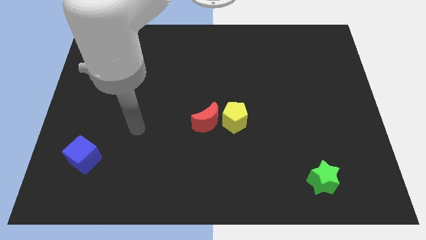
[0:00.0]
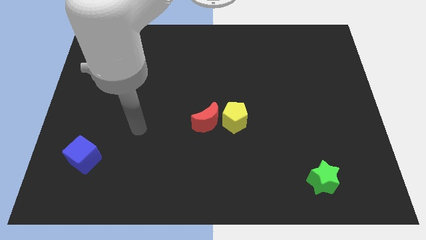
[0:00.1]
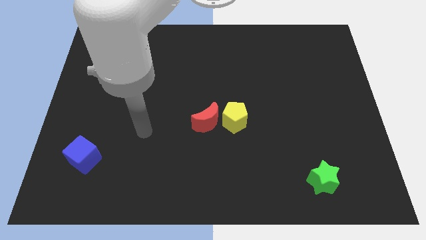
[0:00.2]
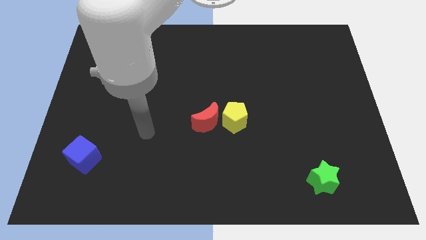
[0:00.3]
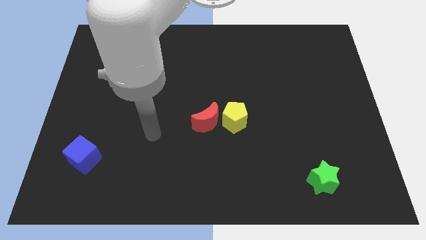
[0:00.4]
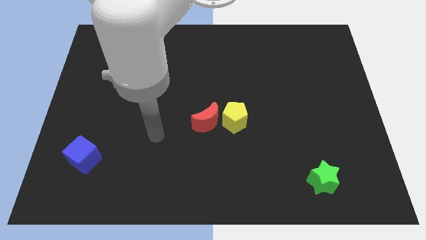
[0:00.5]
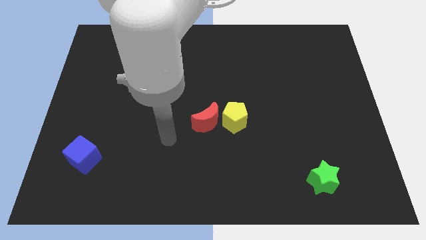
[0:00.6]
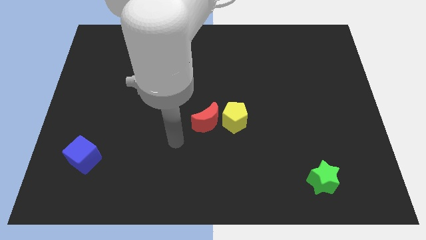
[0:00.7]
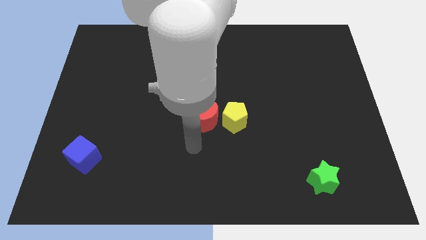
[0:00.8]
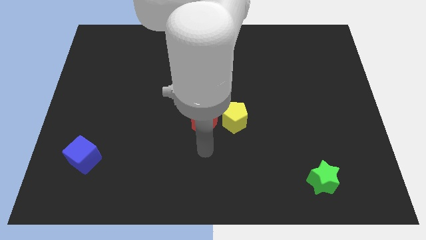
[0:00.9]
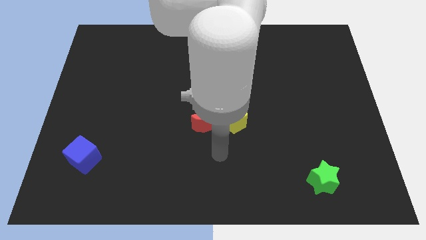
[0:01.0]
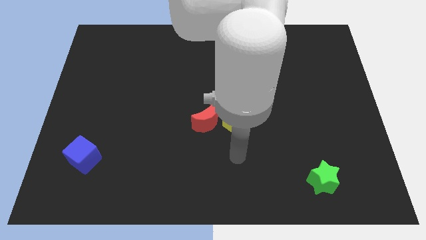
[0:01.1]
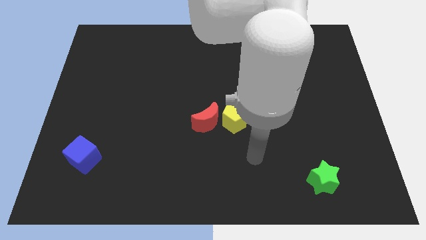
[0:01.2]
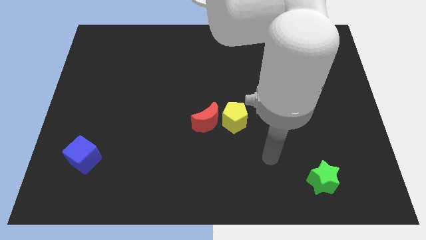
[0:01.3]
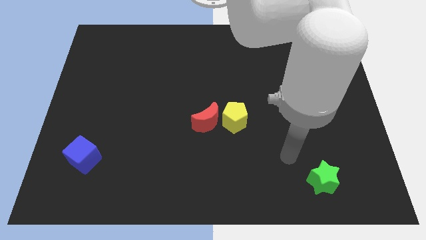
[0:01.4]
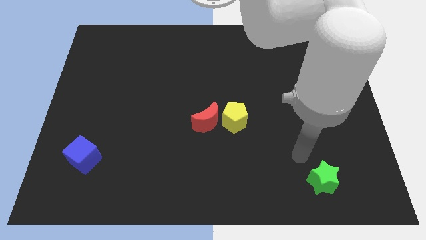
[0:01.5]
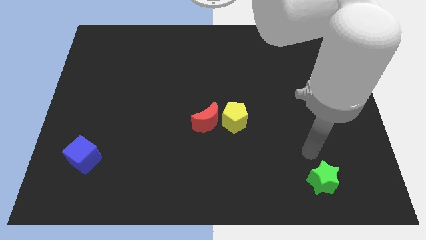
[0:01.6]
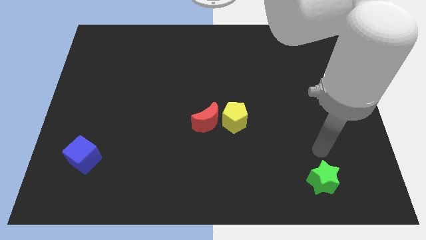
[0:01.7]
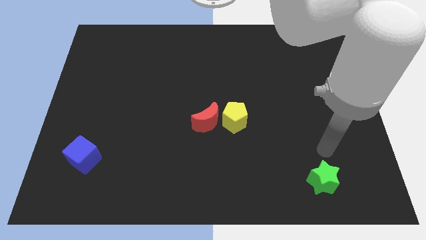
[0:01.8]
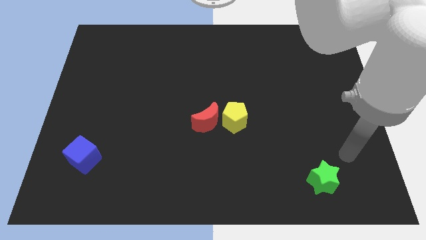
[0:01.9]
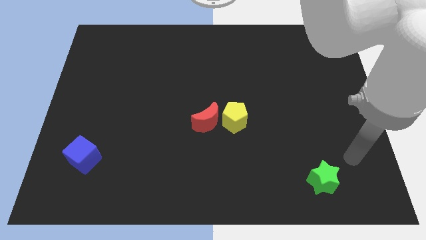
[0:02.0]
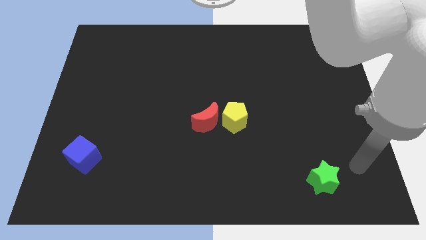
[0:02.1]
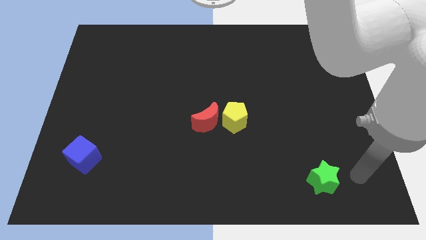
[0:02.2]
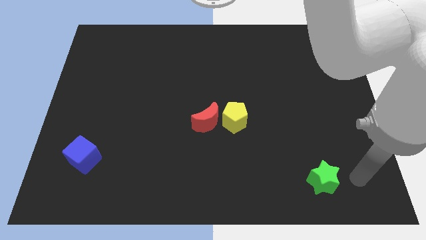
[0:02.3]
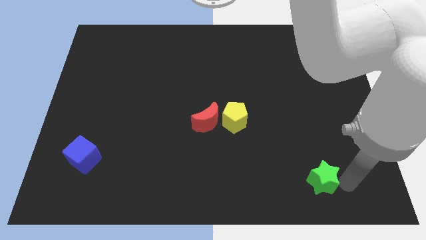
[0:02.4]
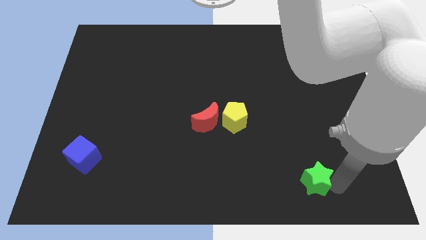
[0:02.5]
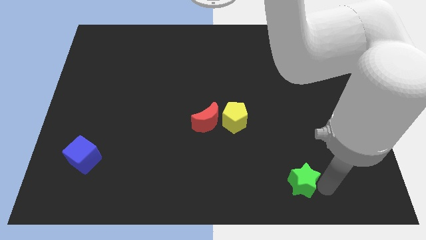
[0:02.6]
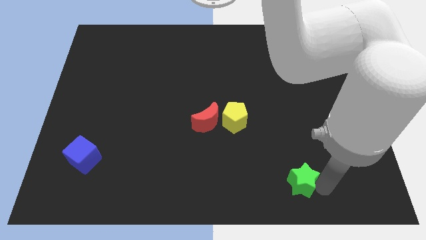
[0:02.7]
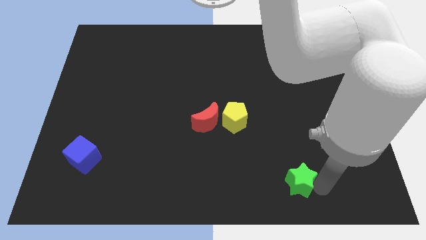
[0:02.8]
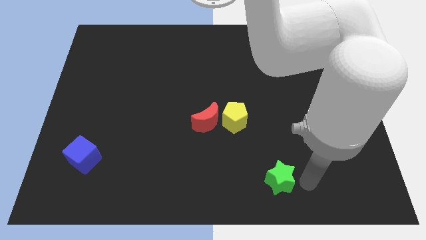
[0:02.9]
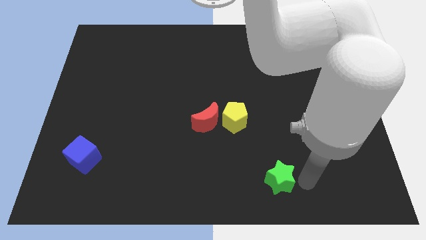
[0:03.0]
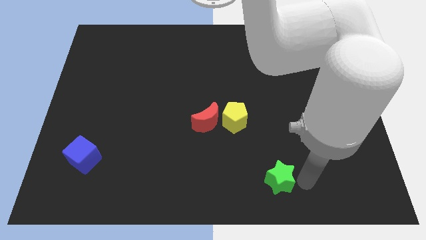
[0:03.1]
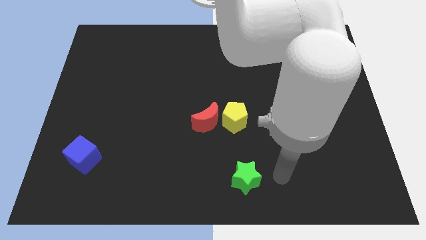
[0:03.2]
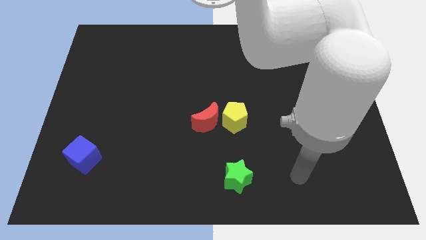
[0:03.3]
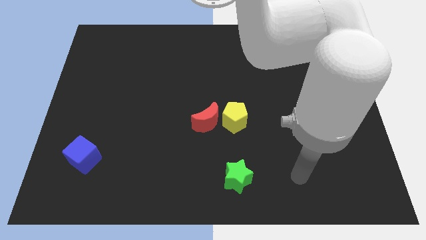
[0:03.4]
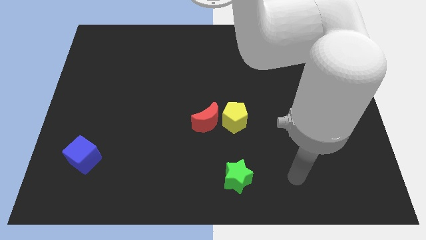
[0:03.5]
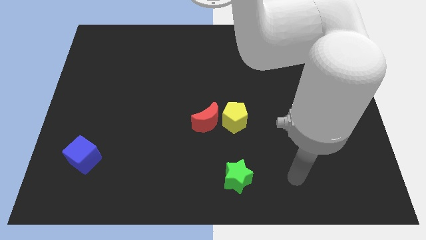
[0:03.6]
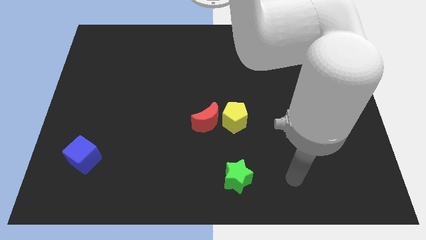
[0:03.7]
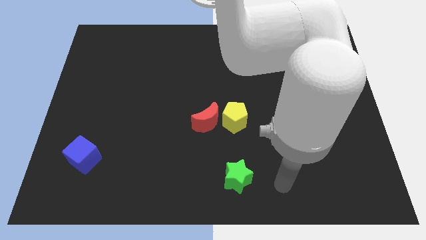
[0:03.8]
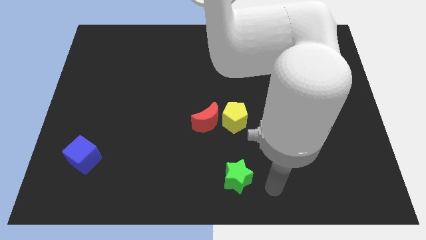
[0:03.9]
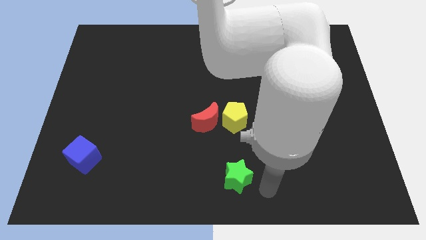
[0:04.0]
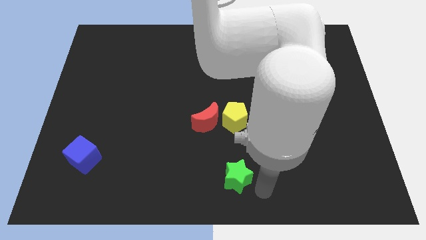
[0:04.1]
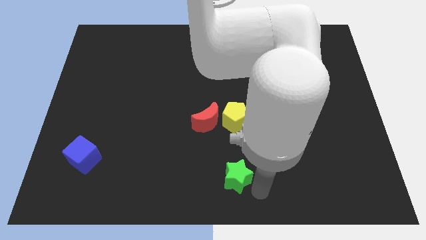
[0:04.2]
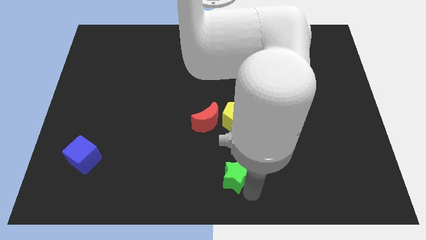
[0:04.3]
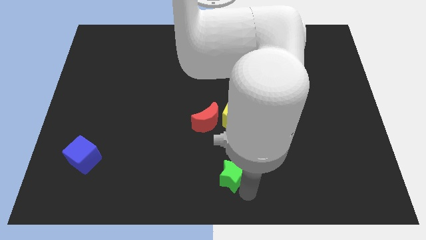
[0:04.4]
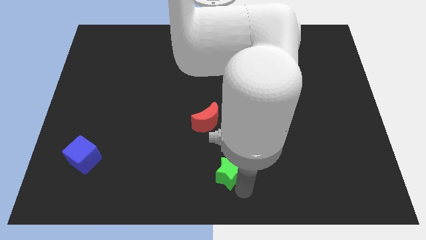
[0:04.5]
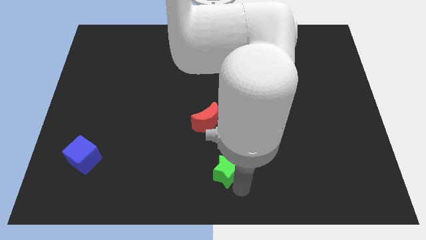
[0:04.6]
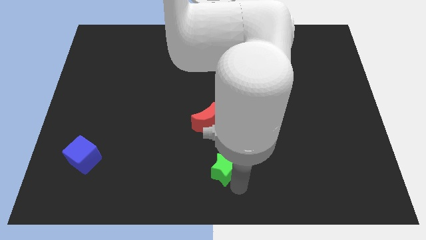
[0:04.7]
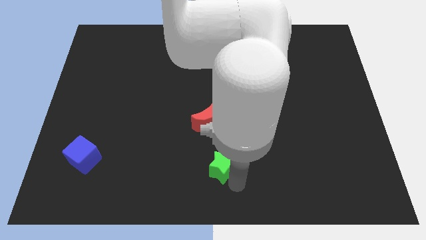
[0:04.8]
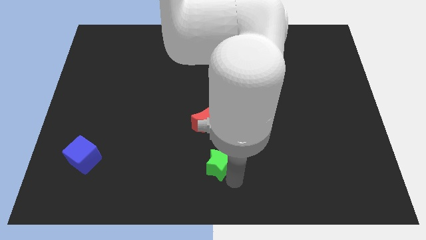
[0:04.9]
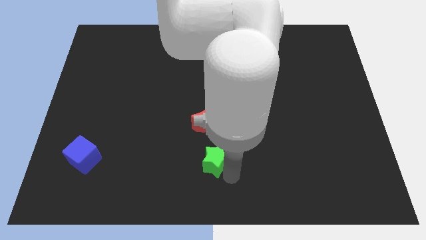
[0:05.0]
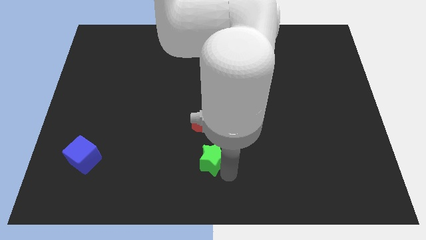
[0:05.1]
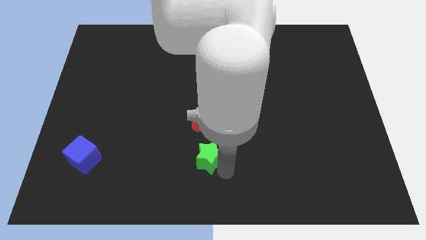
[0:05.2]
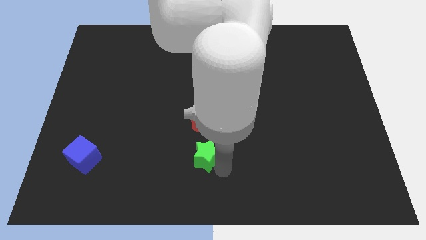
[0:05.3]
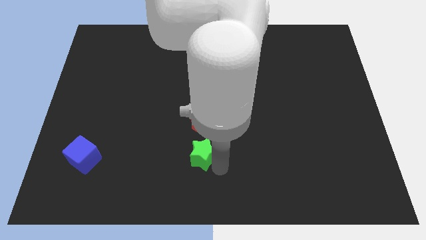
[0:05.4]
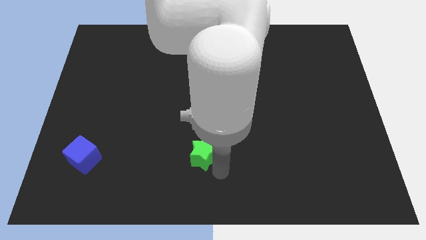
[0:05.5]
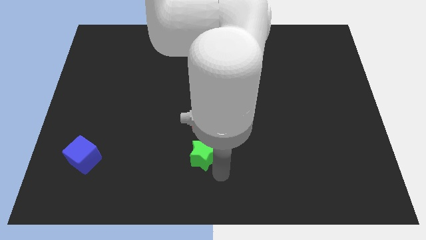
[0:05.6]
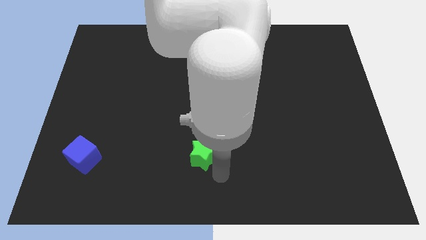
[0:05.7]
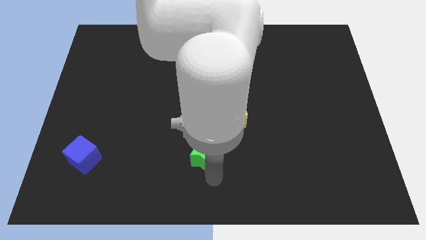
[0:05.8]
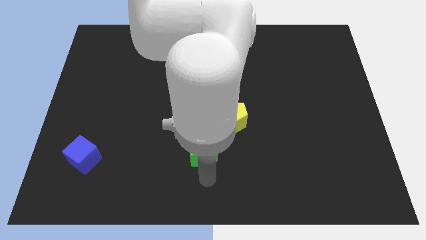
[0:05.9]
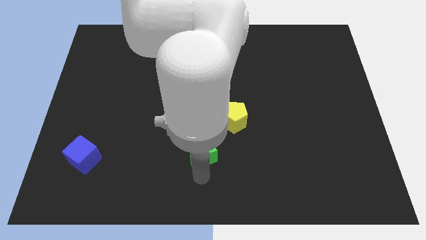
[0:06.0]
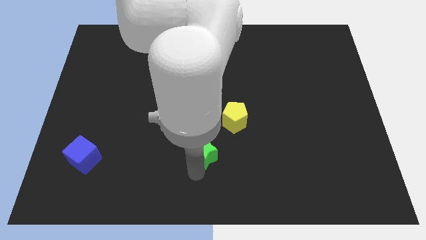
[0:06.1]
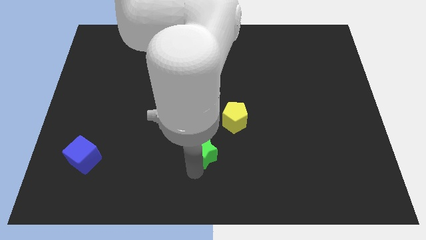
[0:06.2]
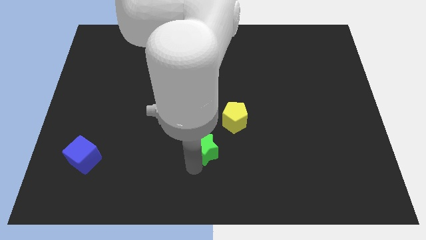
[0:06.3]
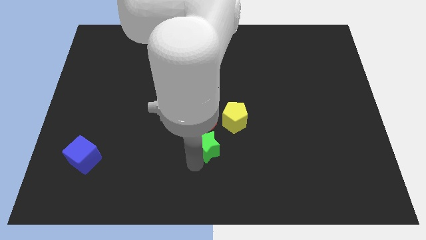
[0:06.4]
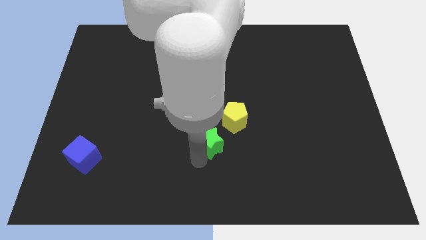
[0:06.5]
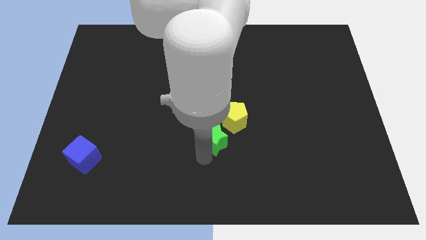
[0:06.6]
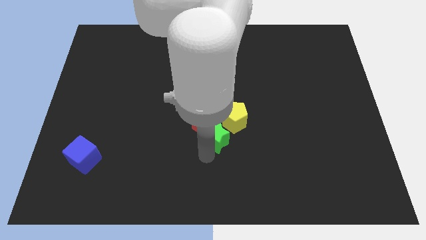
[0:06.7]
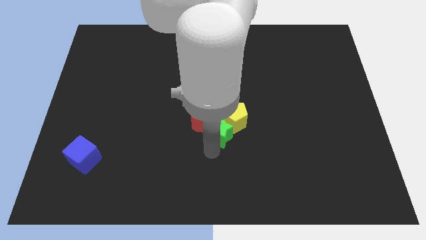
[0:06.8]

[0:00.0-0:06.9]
put the green star towards the moon

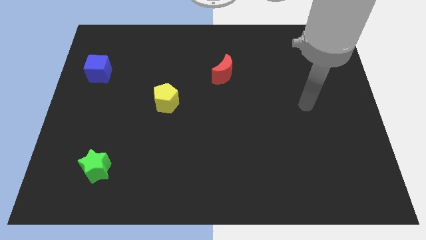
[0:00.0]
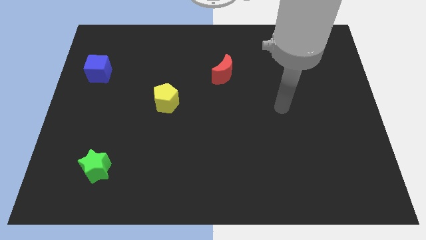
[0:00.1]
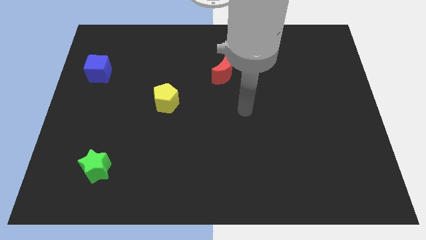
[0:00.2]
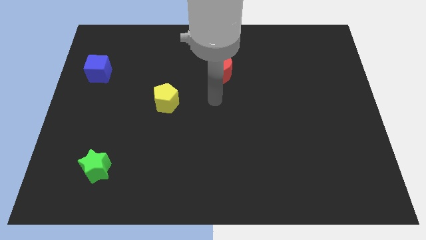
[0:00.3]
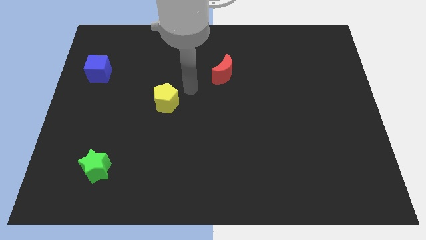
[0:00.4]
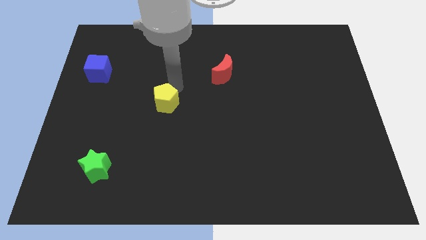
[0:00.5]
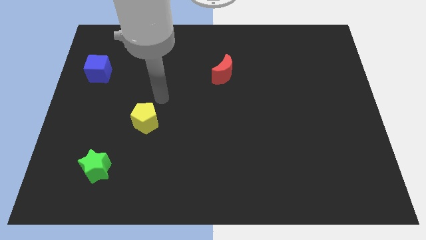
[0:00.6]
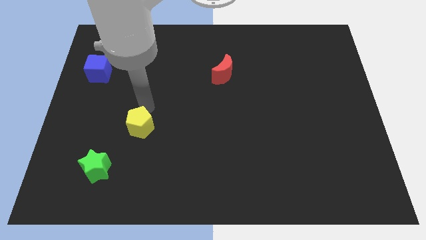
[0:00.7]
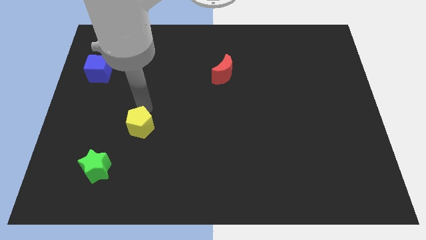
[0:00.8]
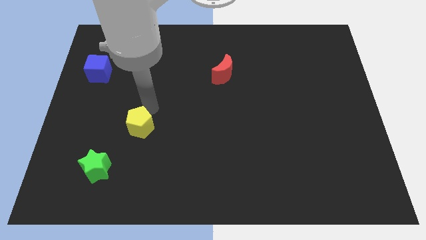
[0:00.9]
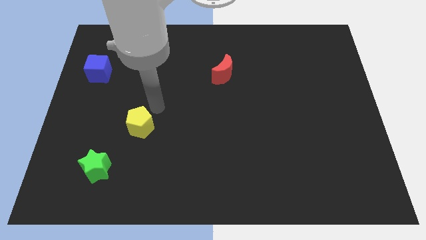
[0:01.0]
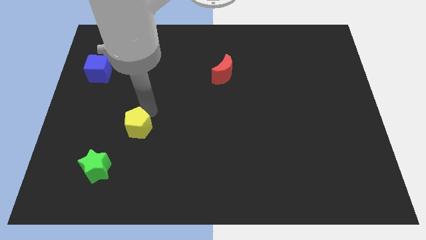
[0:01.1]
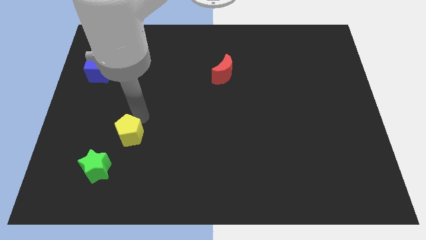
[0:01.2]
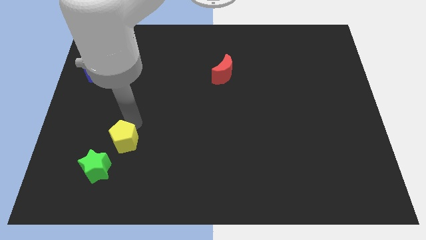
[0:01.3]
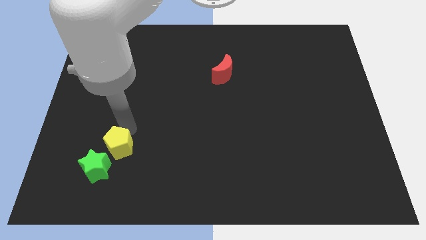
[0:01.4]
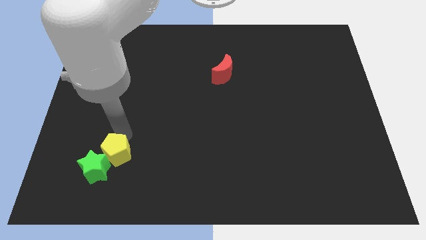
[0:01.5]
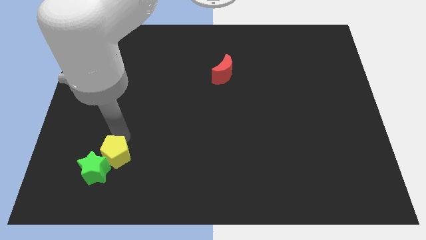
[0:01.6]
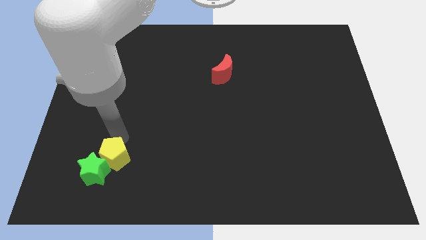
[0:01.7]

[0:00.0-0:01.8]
move the yellow block to the green block
